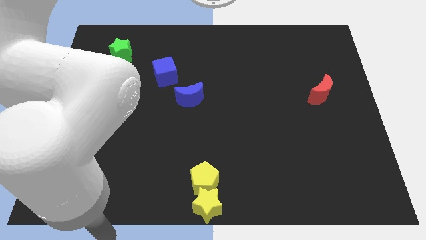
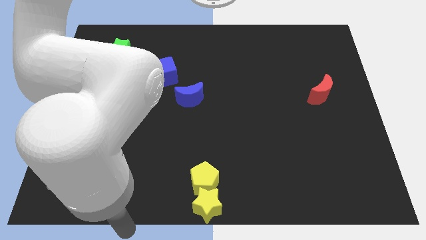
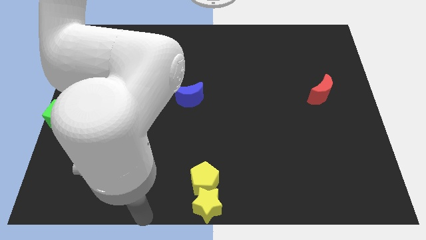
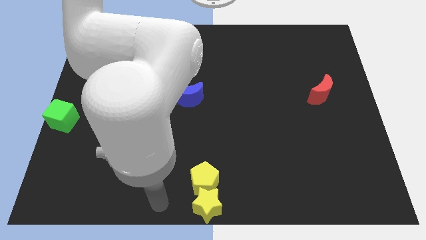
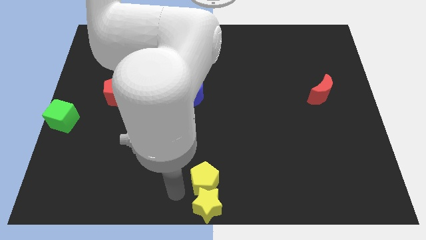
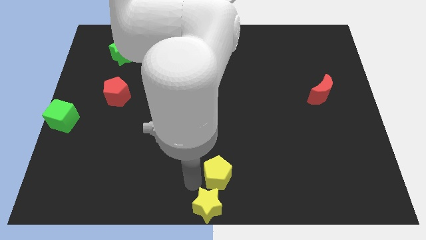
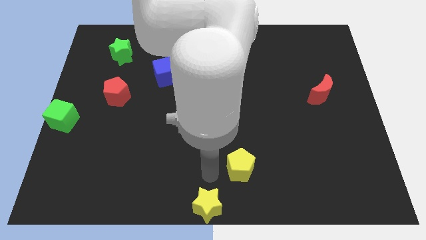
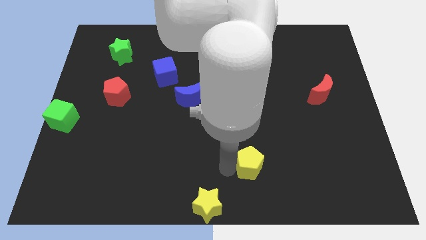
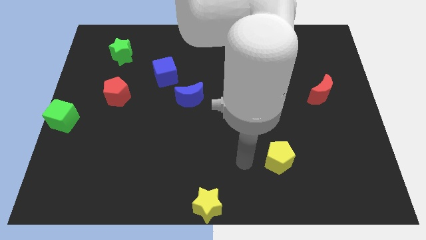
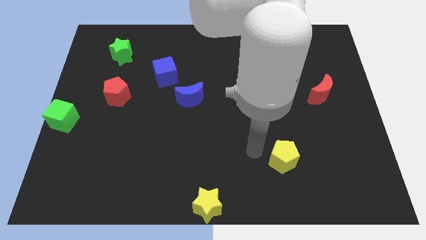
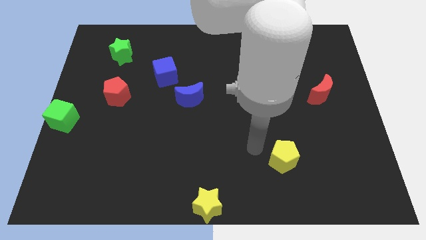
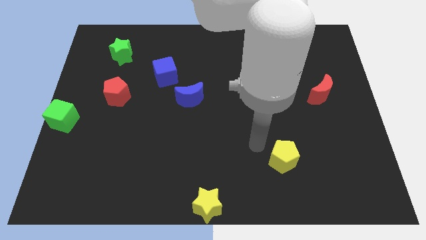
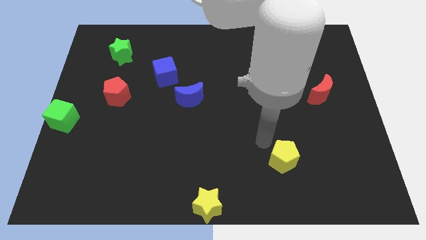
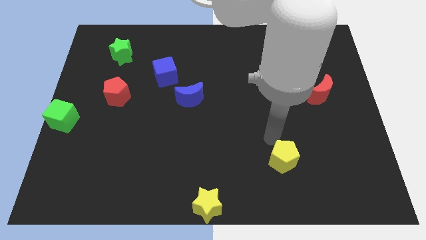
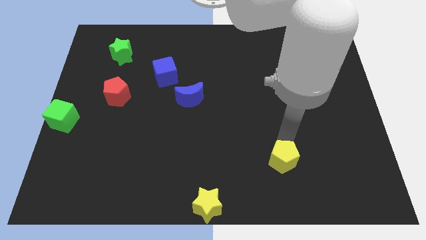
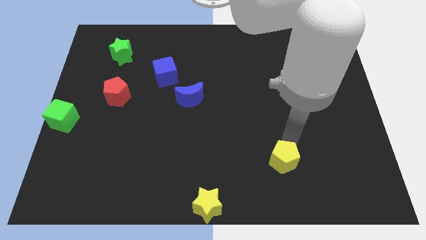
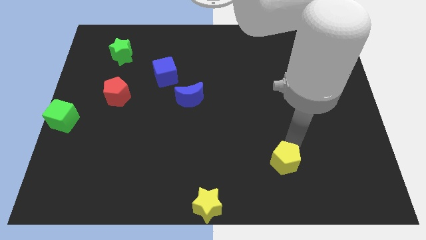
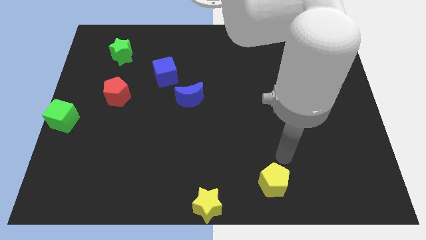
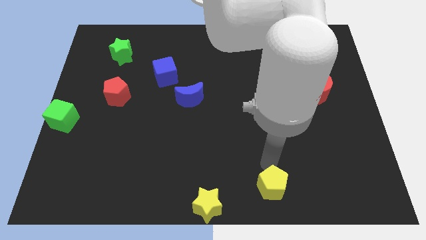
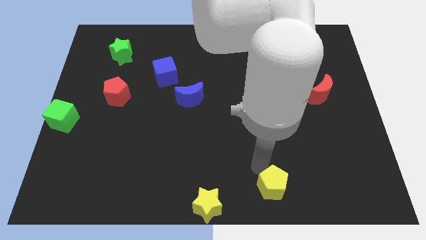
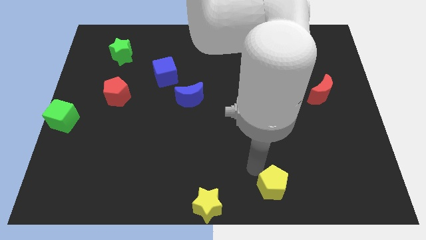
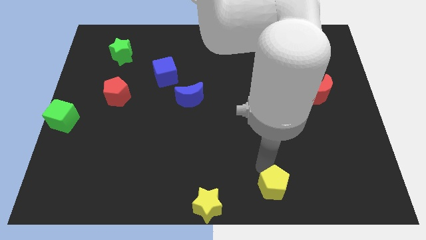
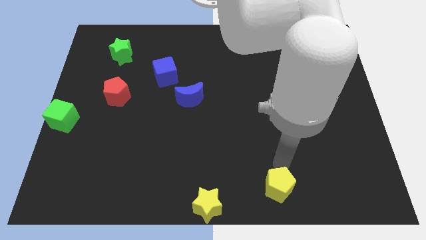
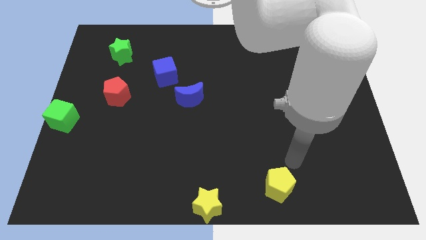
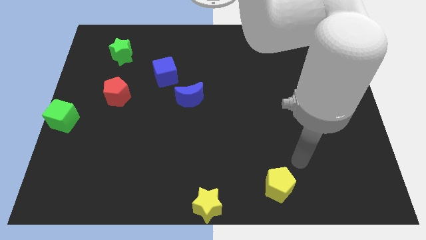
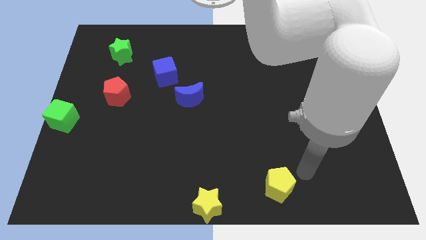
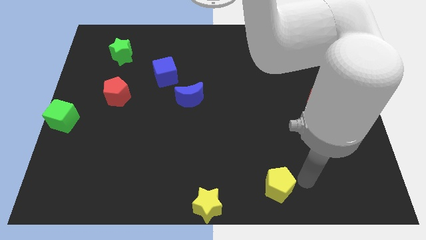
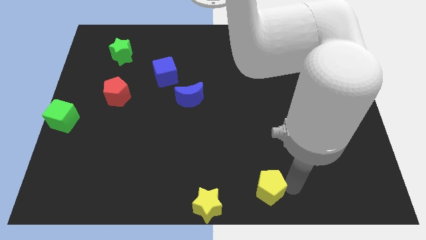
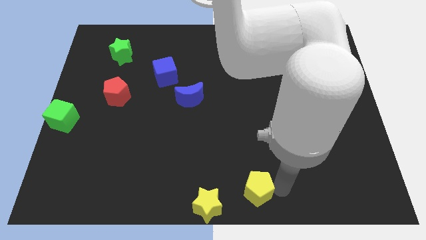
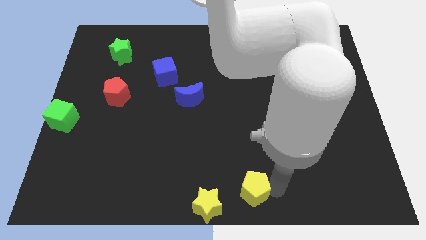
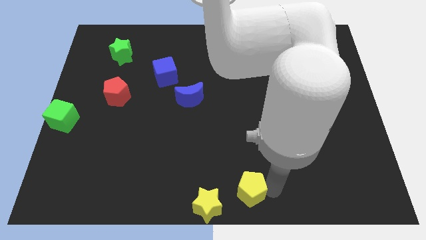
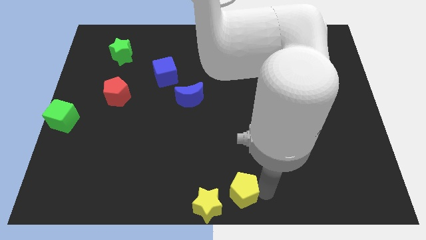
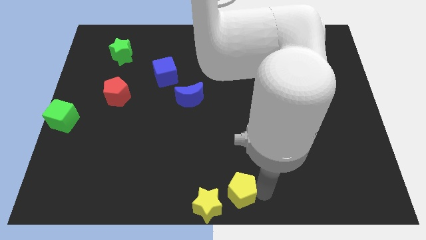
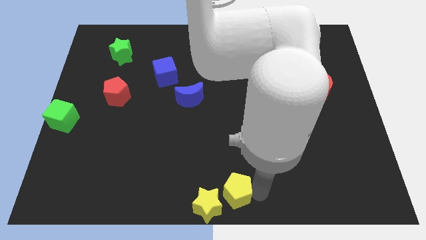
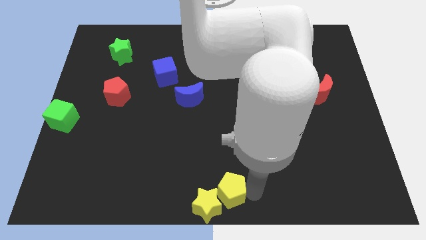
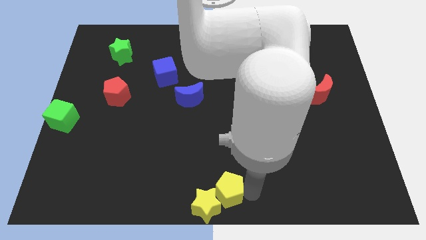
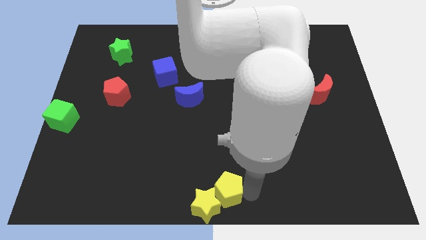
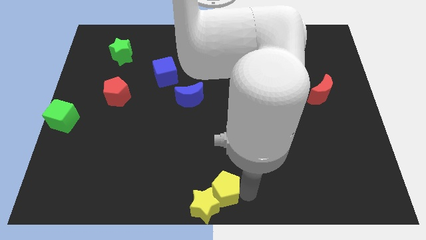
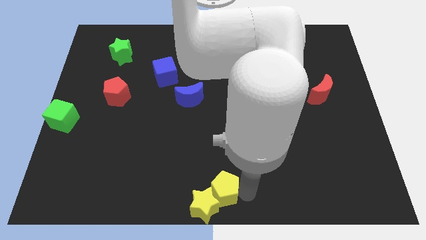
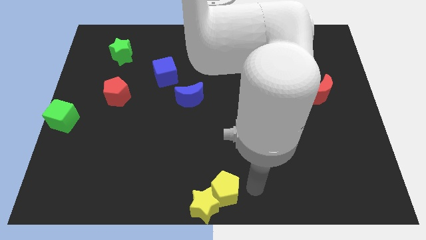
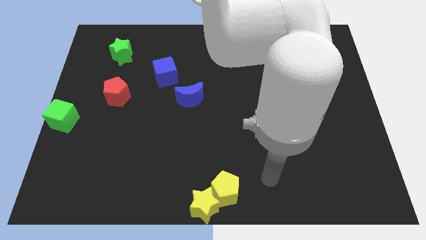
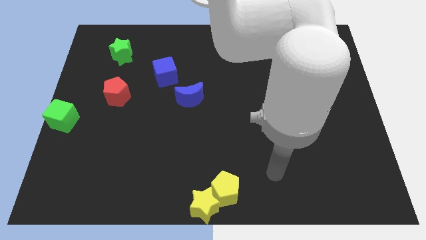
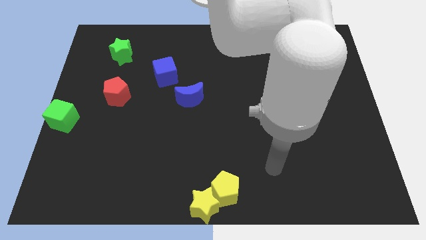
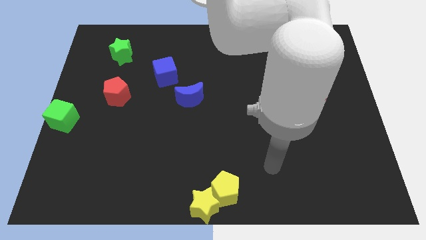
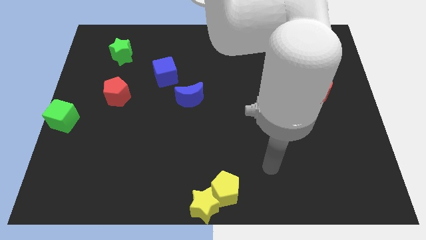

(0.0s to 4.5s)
push the yellow pentagon into the yellow star

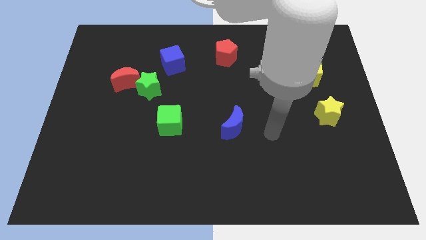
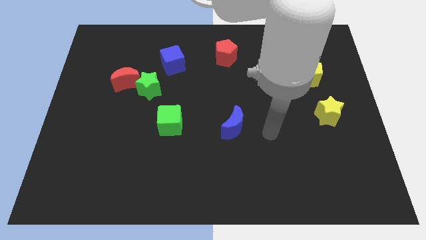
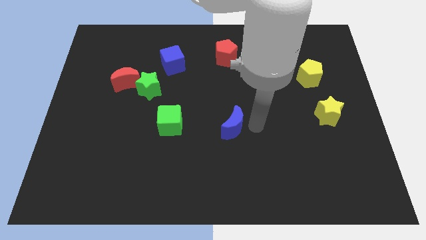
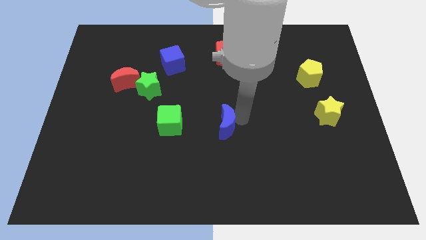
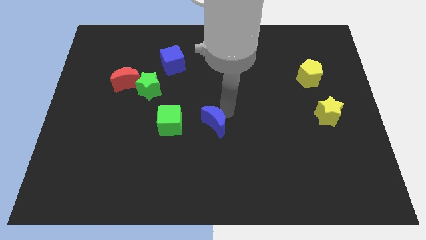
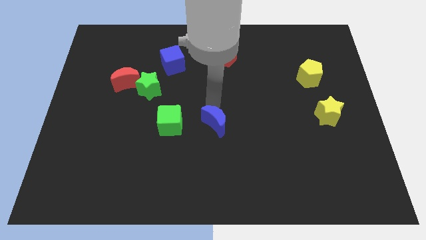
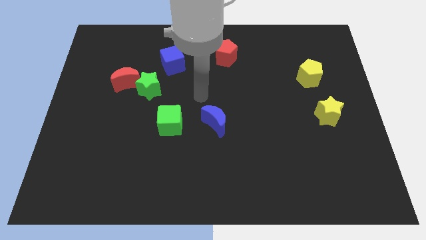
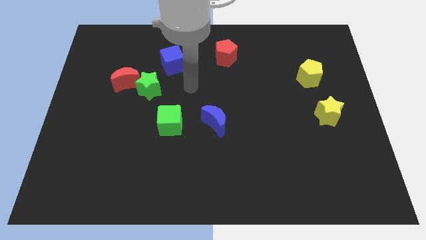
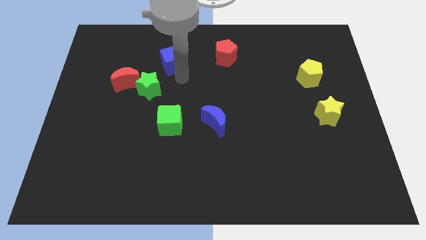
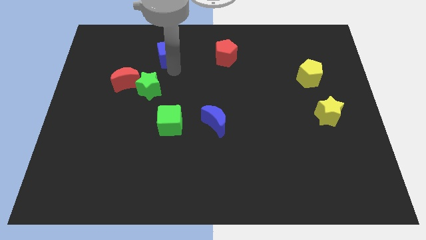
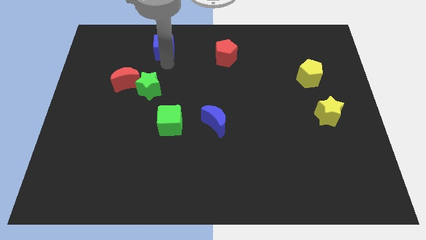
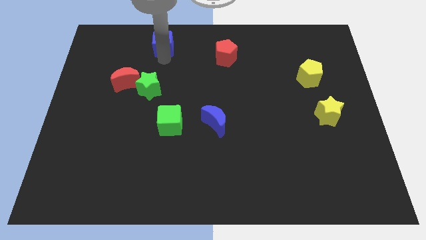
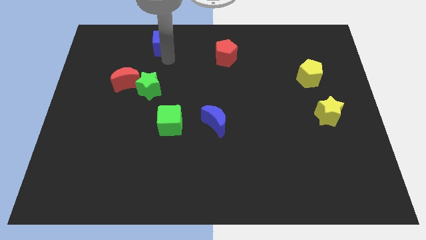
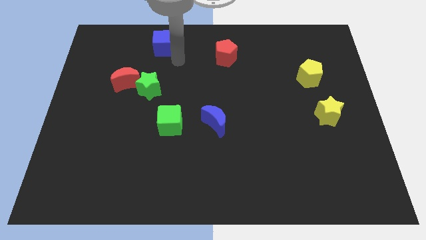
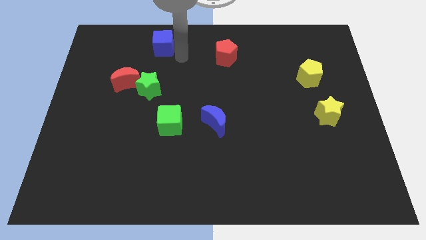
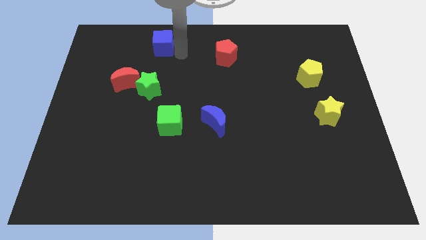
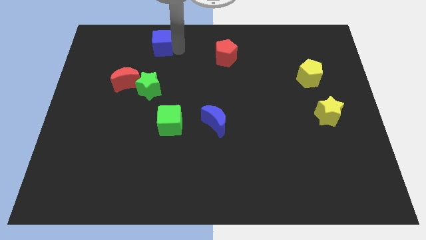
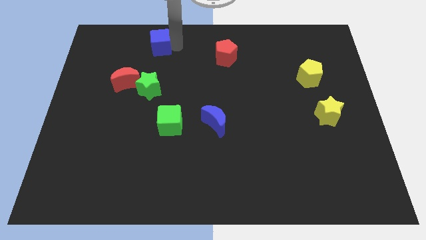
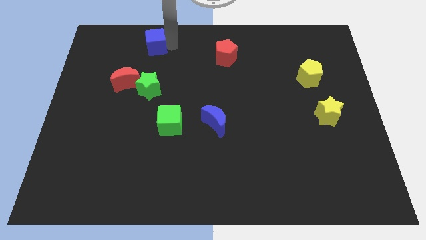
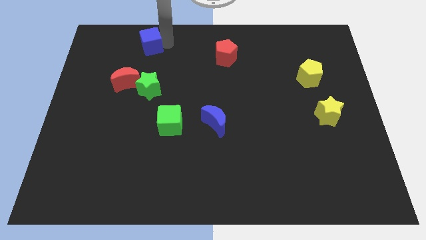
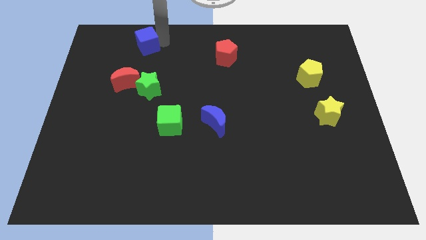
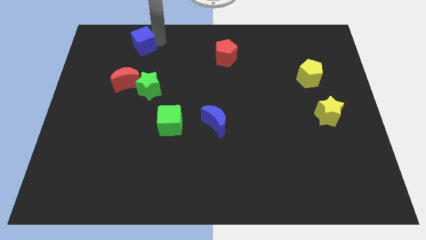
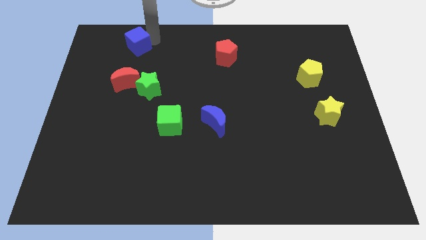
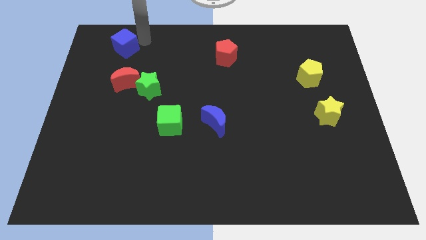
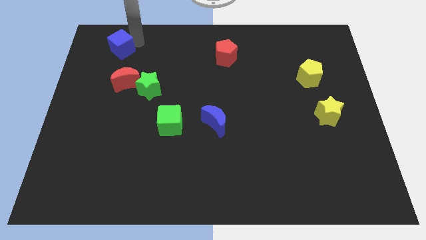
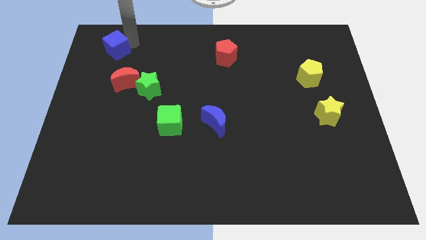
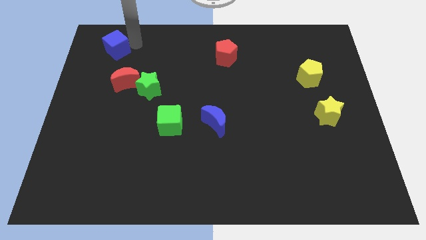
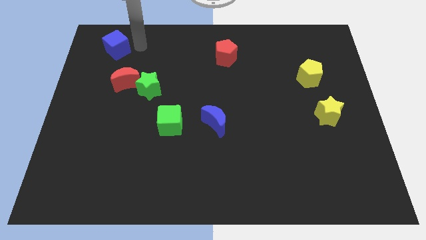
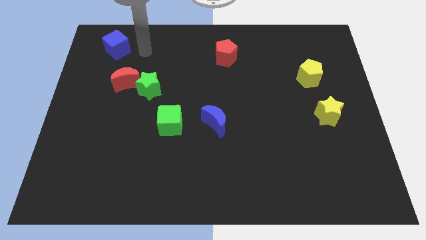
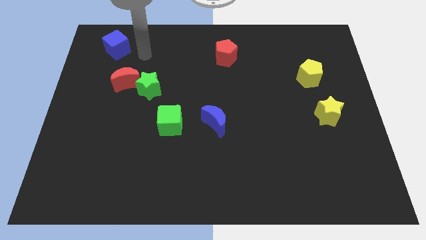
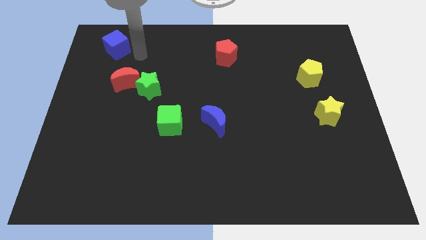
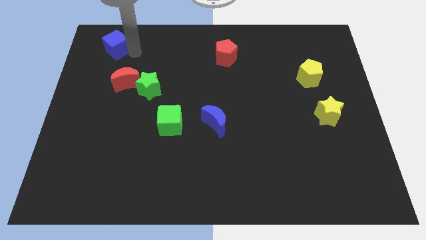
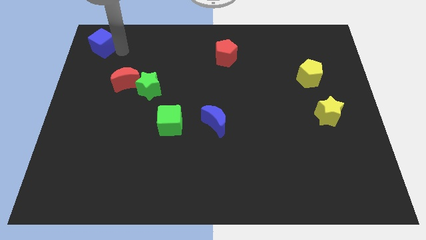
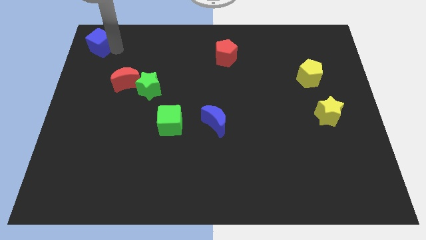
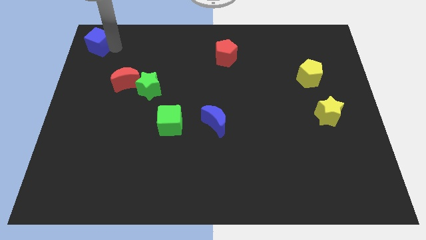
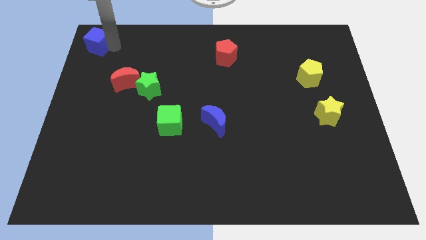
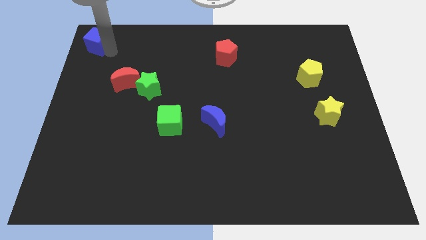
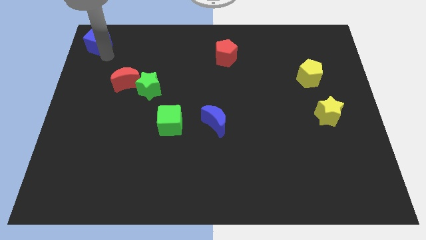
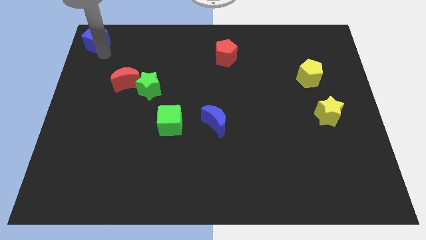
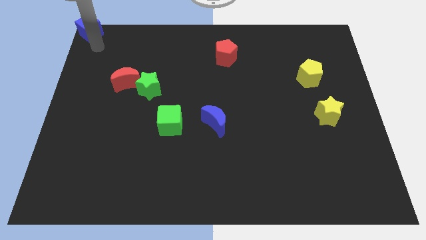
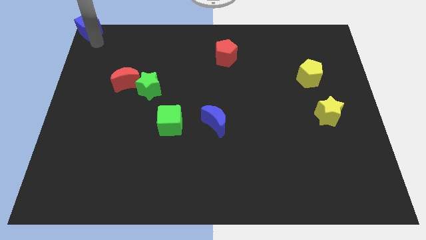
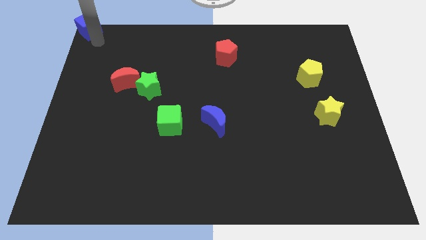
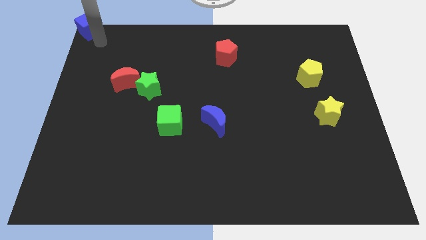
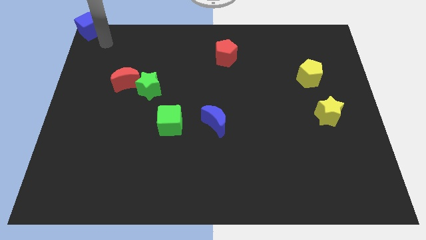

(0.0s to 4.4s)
put the blue cube at the top left corner of the board

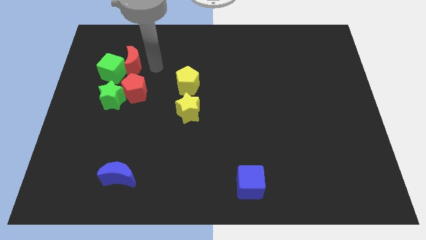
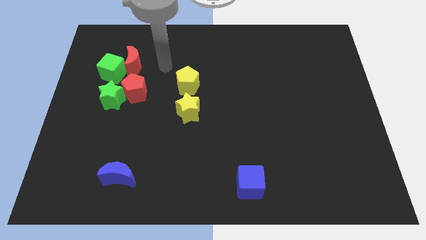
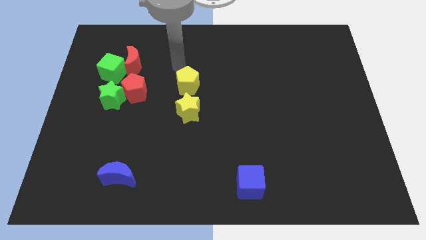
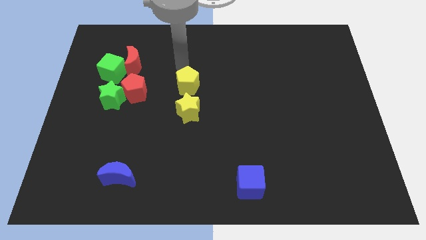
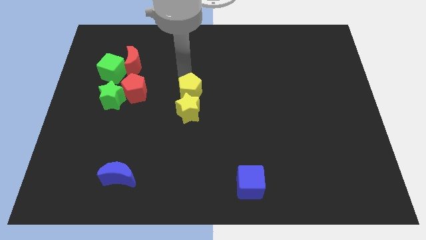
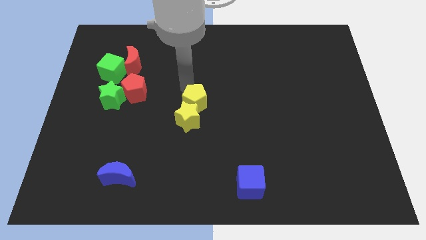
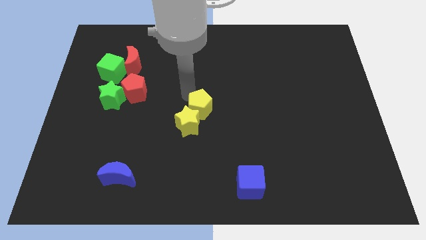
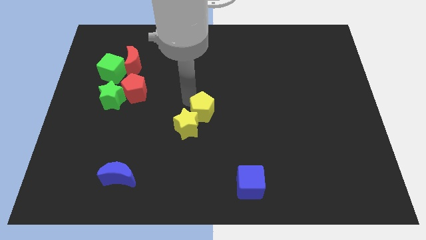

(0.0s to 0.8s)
move yellow pentagon into the yellow star
